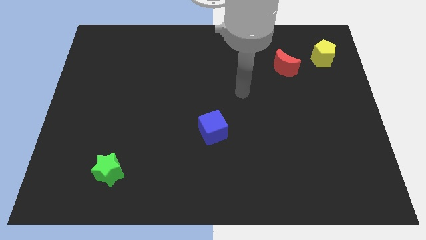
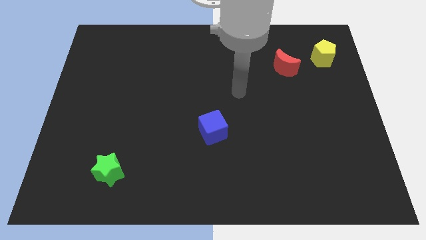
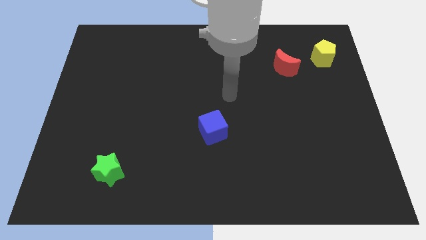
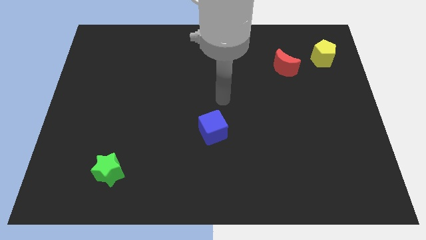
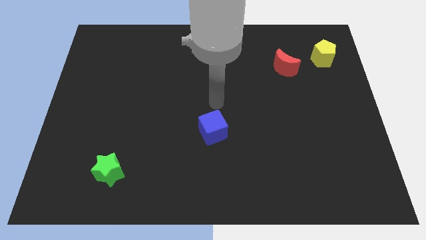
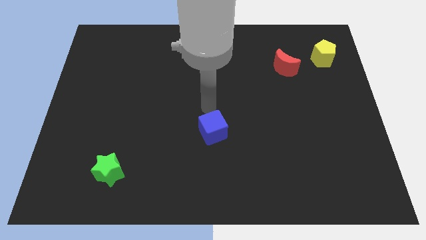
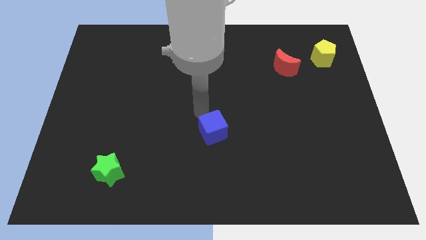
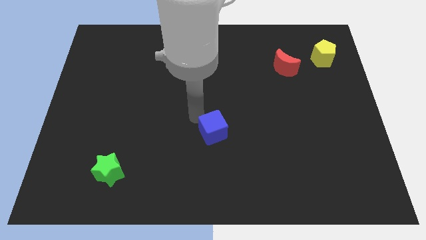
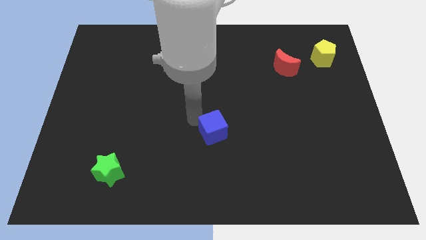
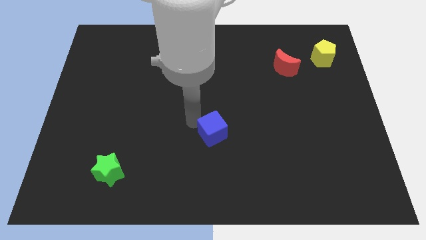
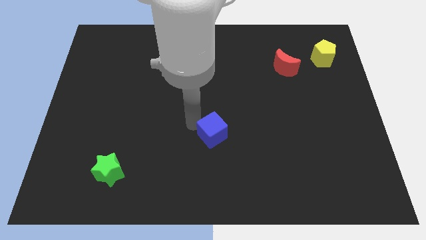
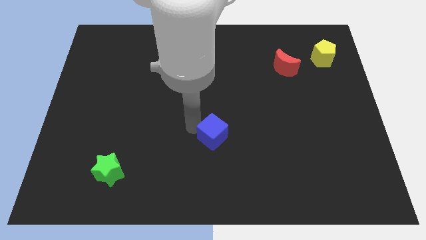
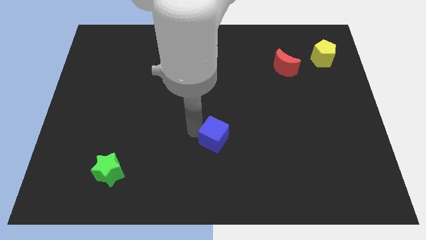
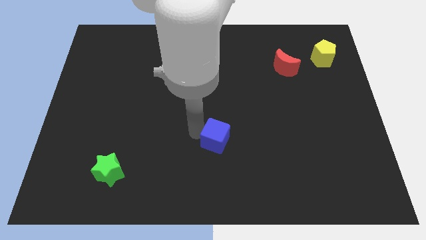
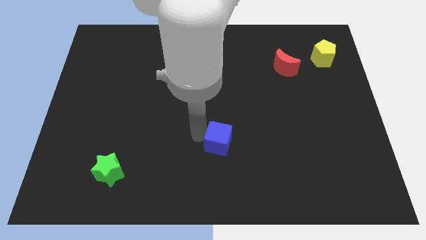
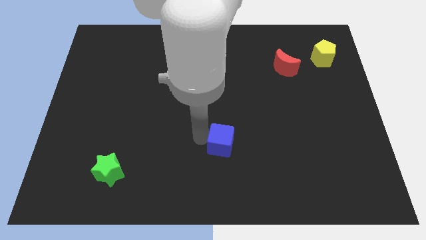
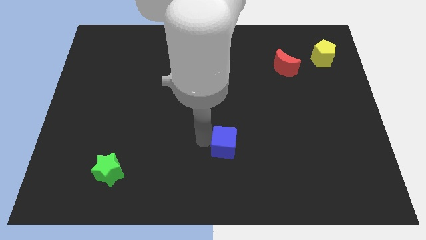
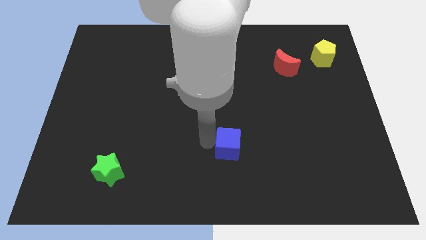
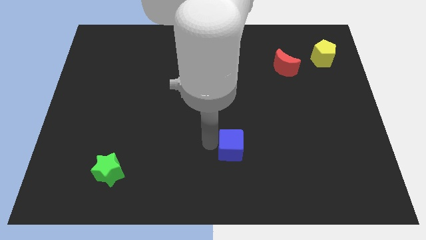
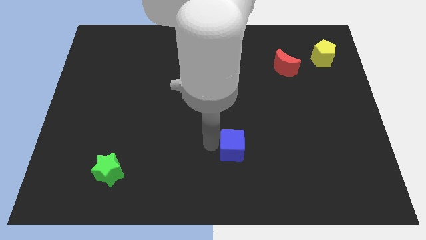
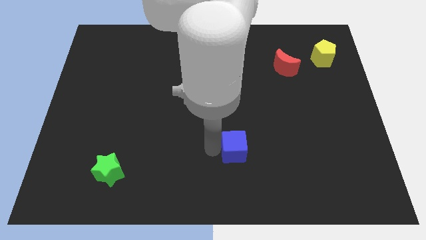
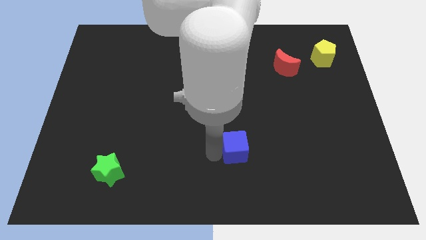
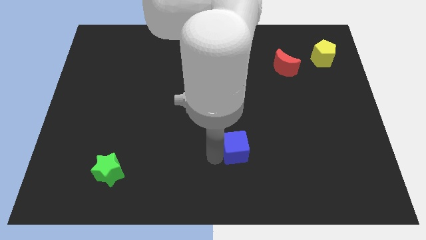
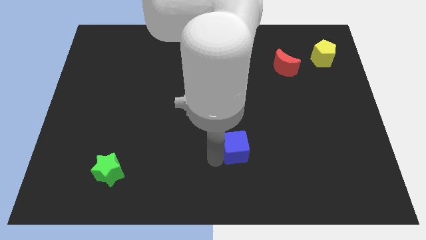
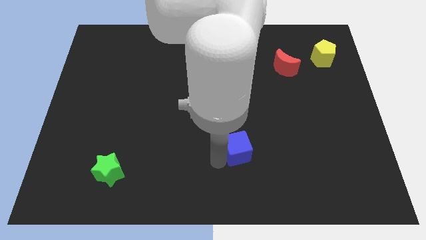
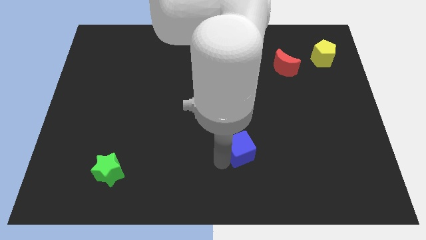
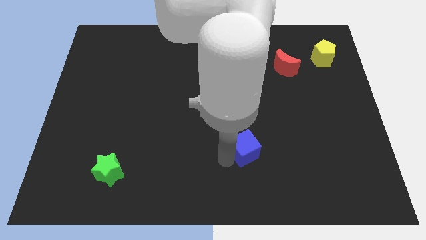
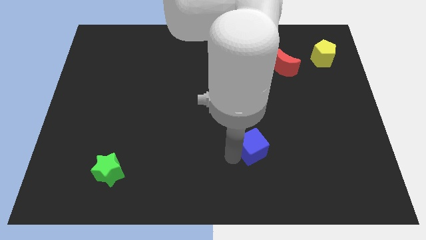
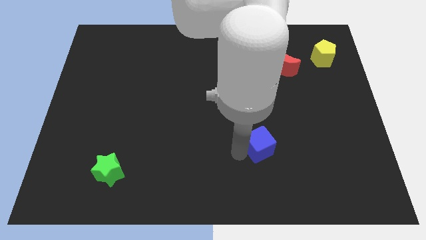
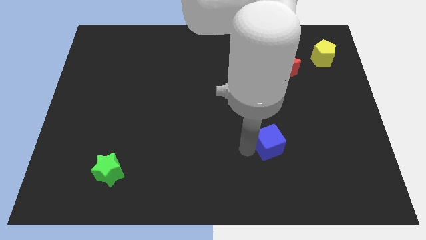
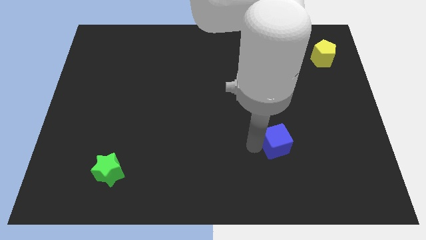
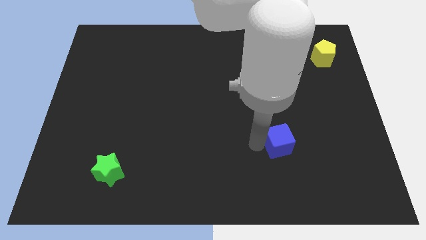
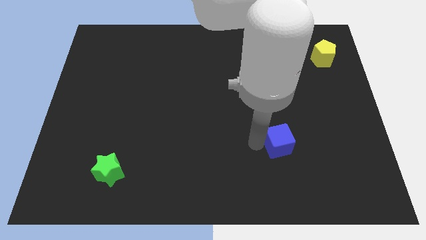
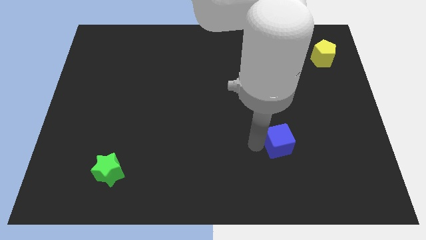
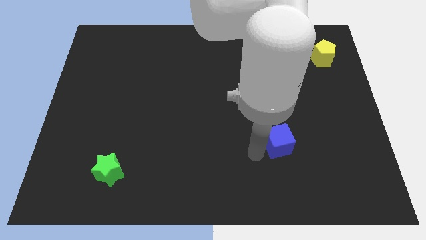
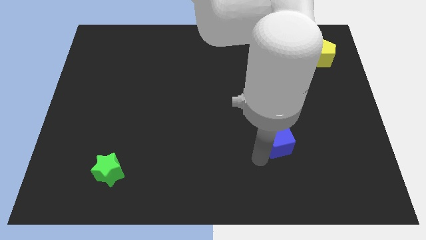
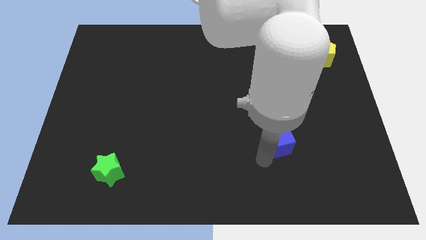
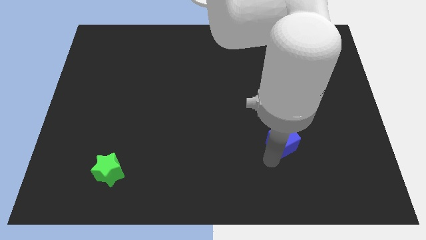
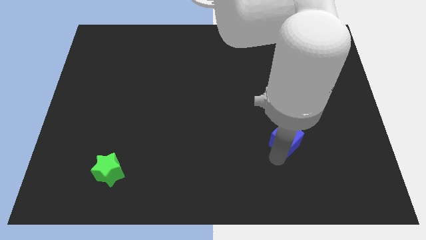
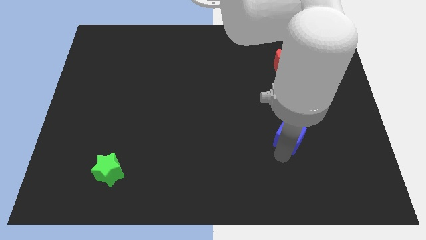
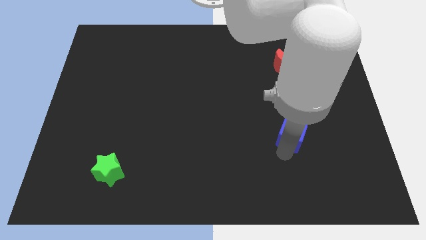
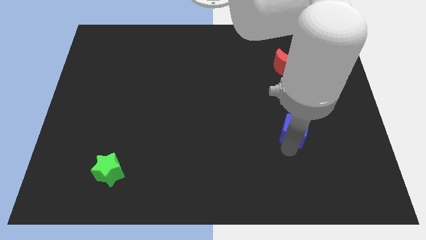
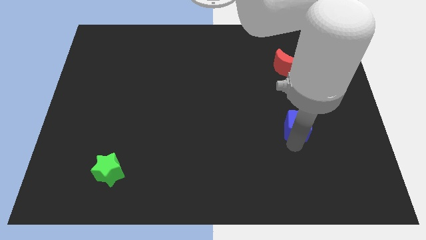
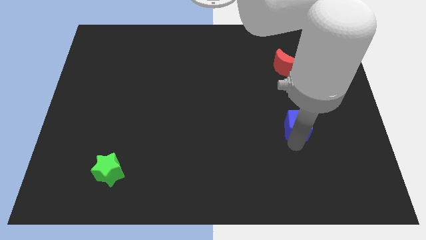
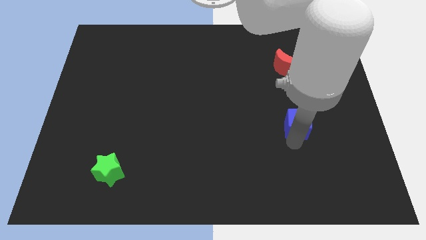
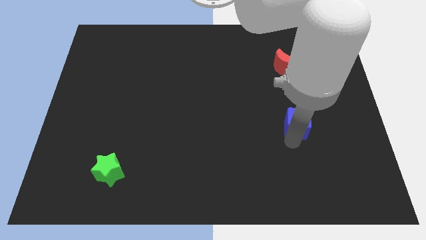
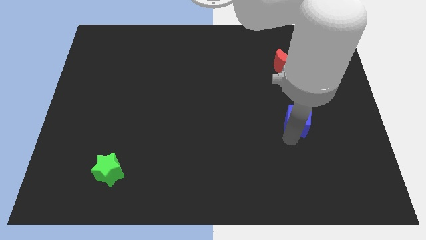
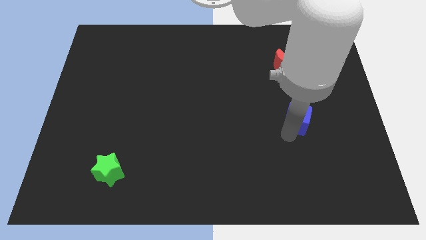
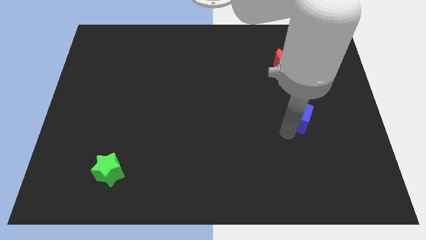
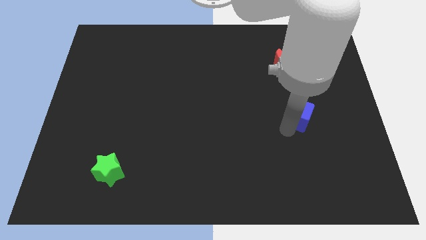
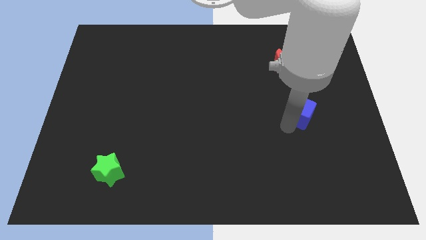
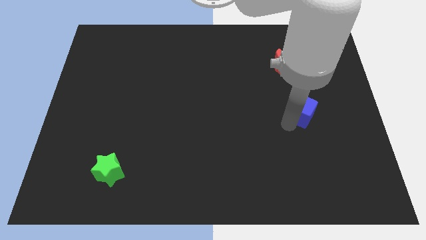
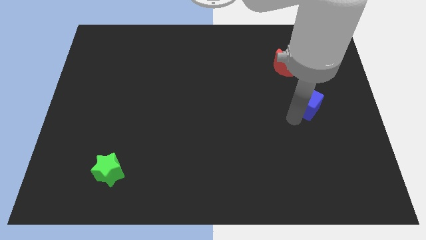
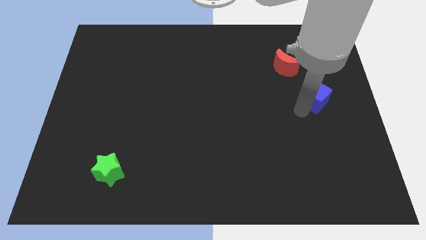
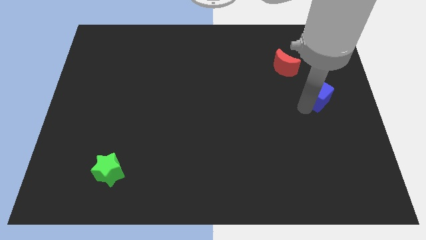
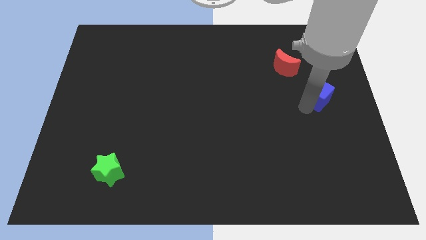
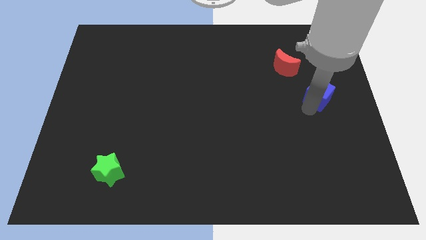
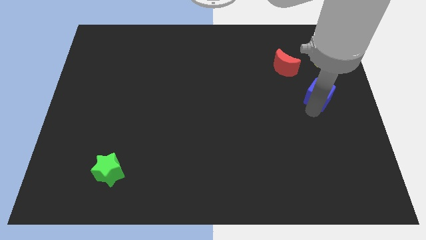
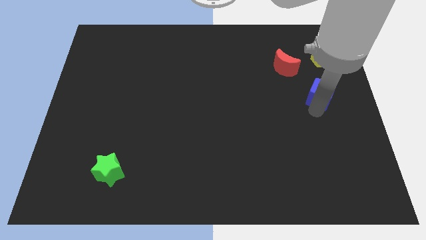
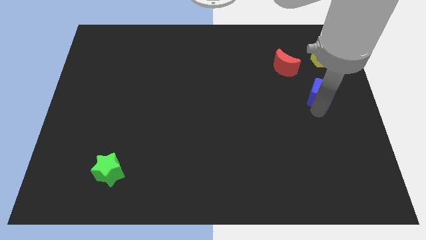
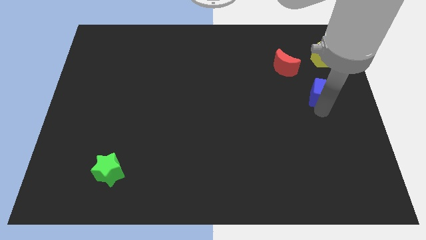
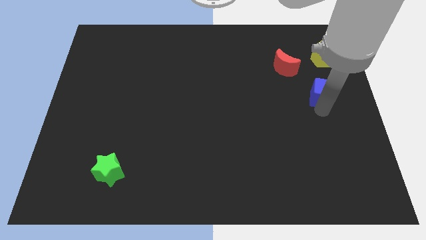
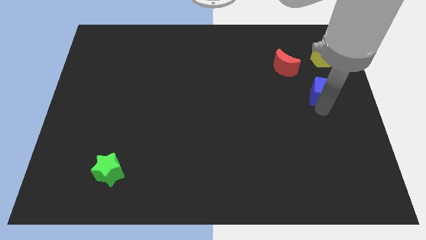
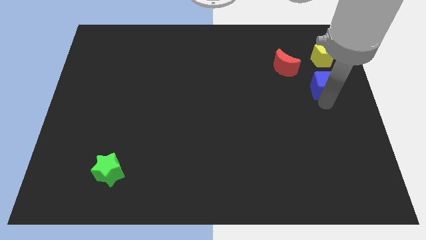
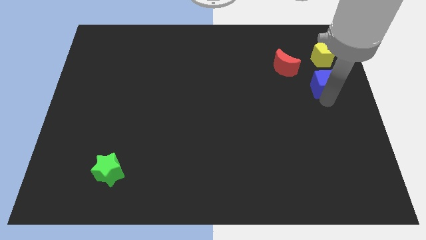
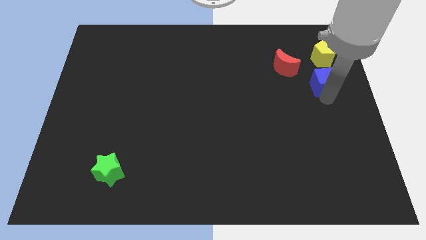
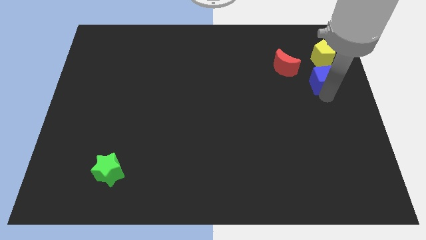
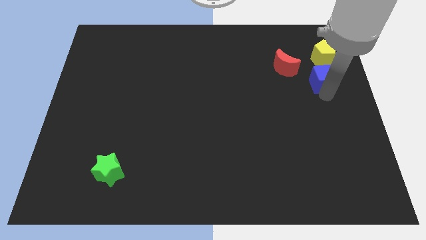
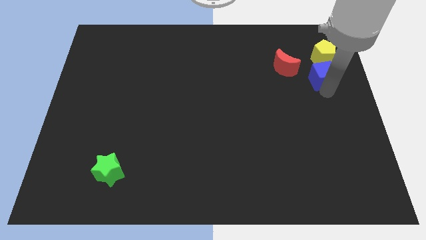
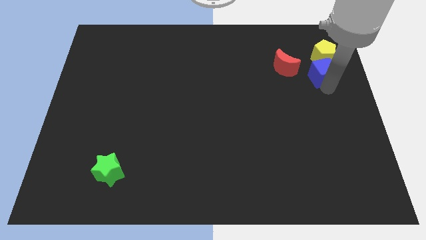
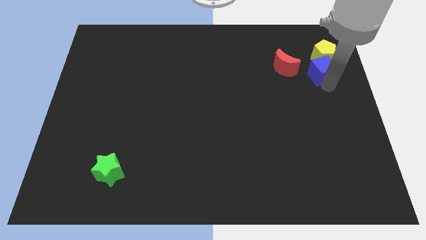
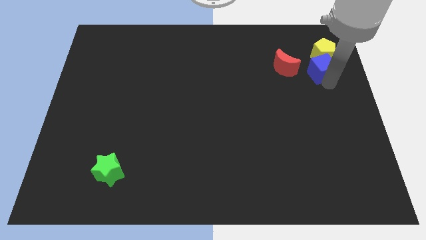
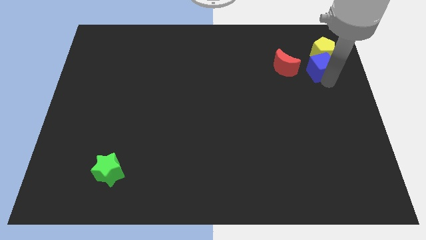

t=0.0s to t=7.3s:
move the blue block towards the yellow block

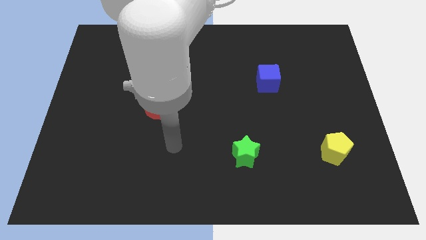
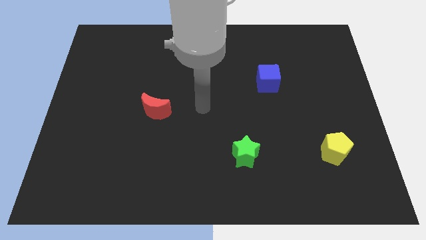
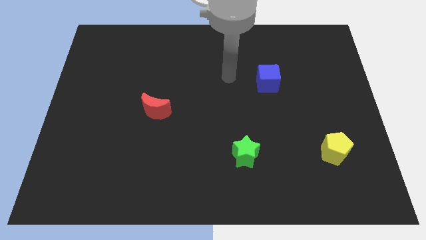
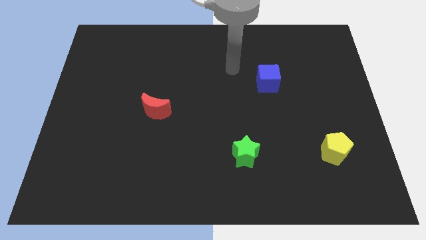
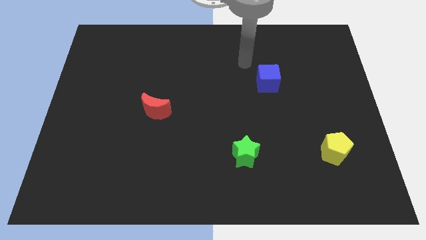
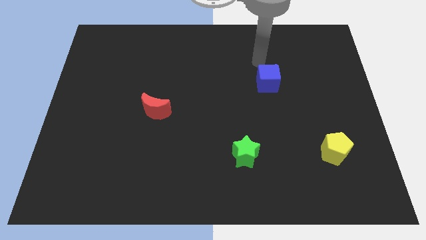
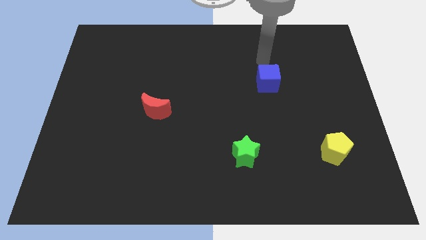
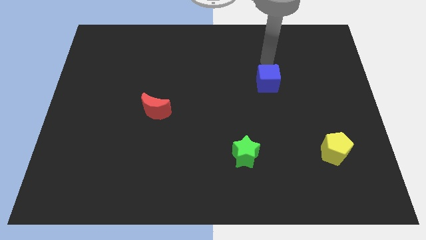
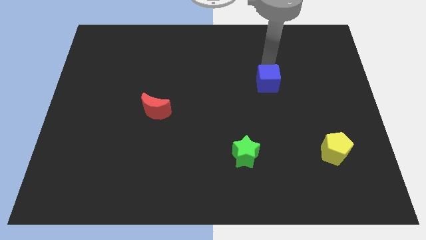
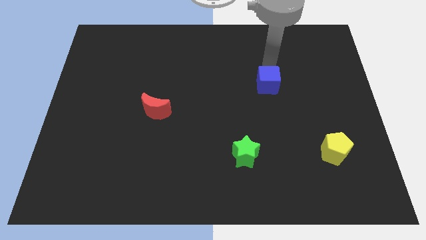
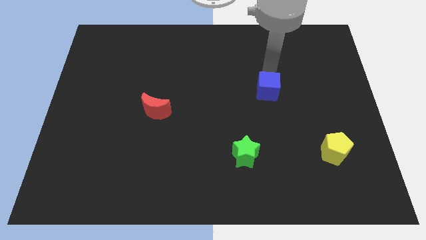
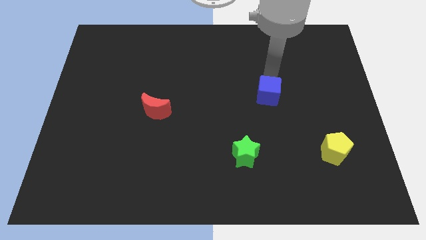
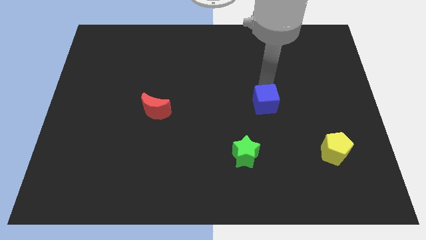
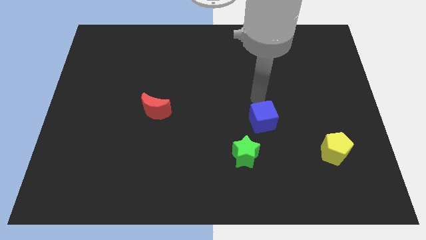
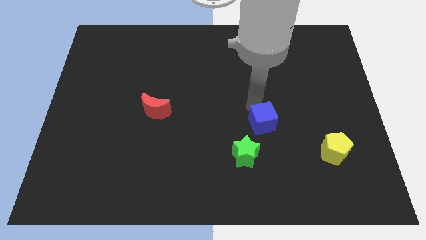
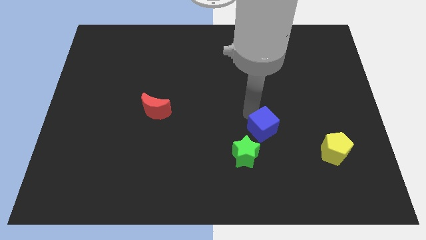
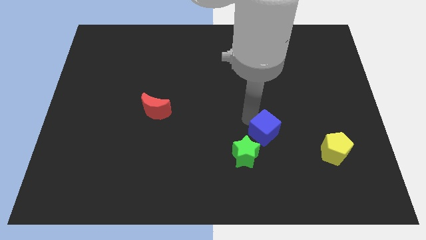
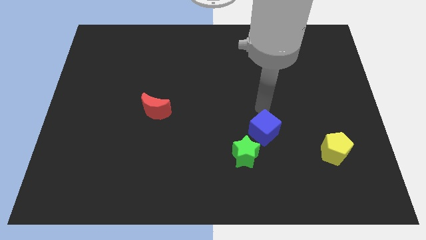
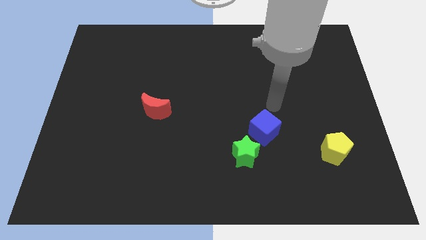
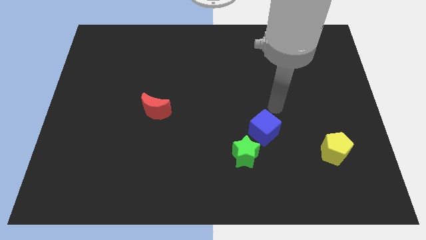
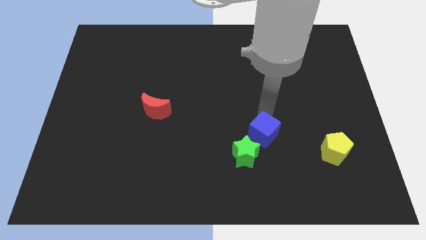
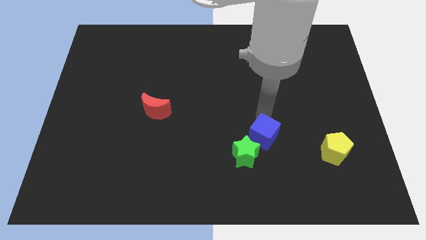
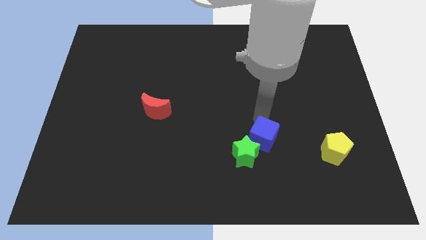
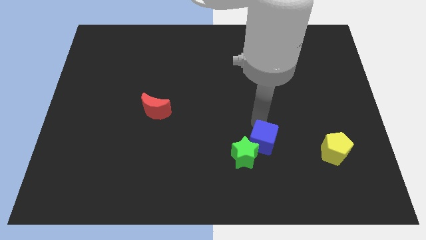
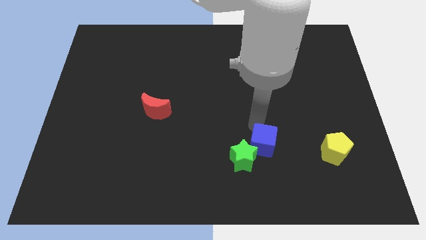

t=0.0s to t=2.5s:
move the blue cube close to the green star
